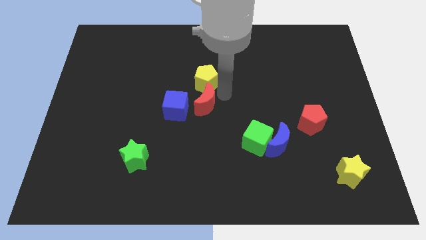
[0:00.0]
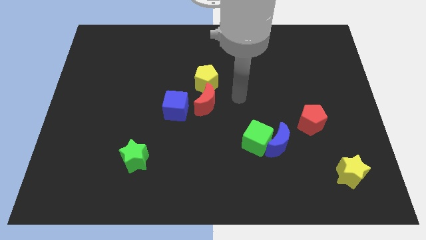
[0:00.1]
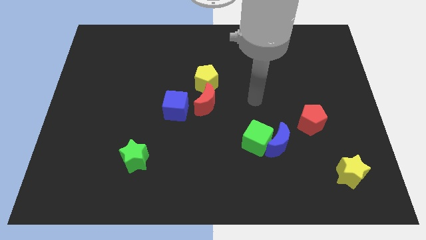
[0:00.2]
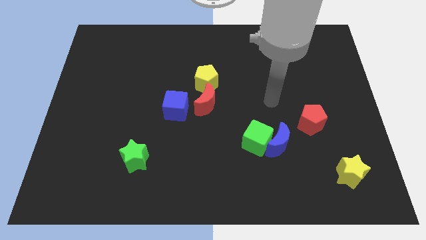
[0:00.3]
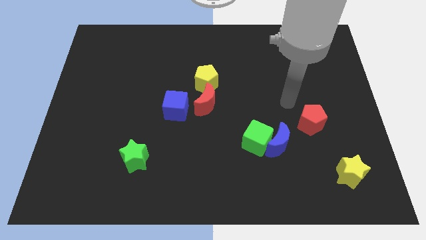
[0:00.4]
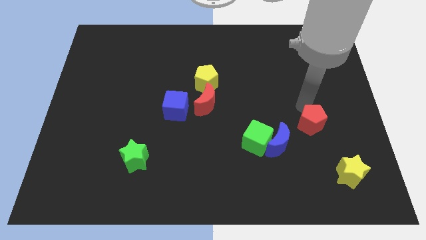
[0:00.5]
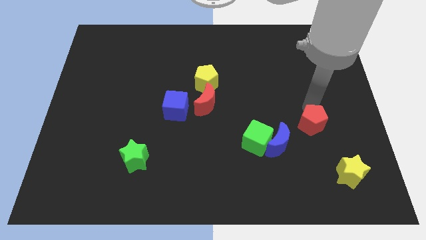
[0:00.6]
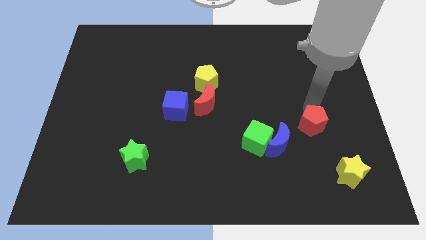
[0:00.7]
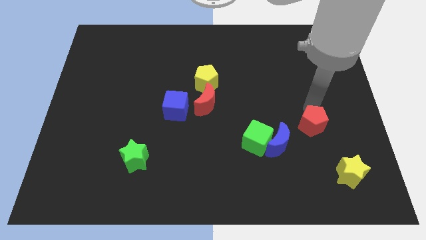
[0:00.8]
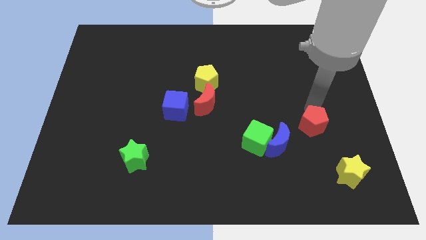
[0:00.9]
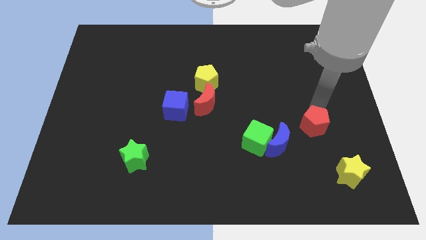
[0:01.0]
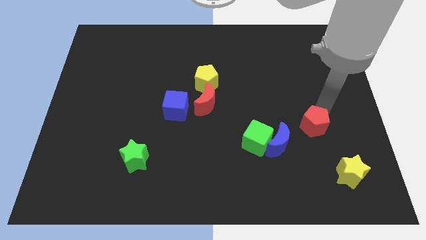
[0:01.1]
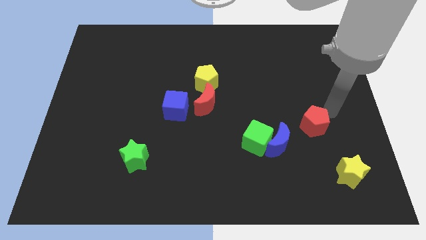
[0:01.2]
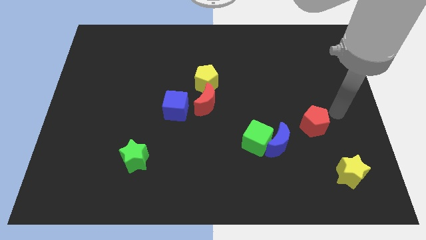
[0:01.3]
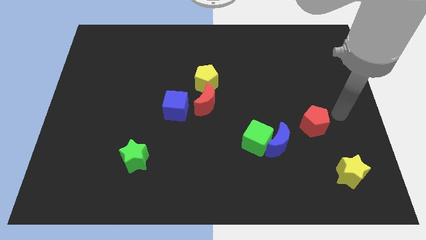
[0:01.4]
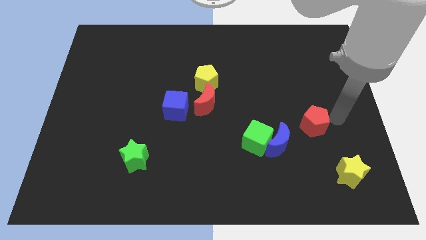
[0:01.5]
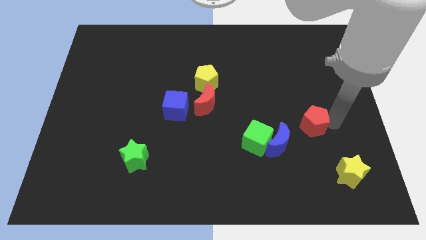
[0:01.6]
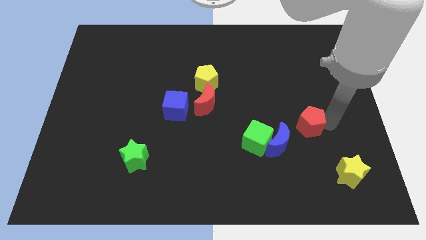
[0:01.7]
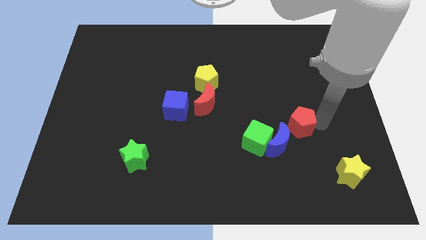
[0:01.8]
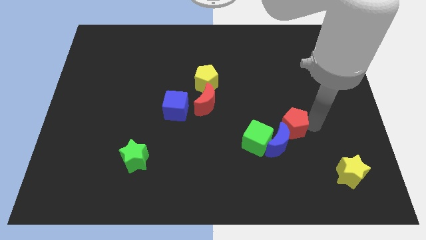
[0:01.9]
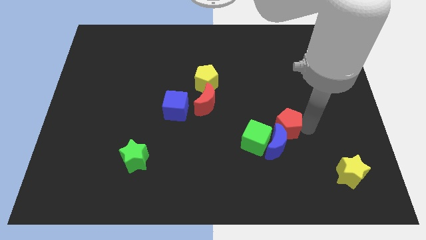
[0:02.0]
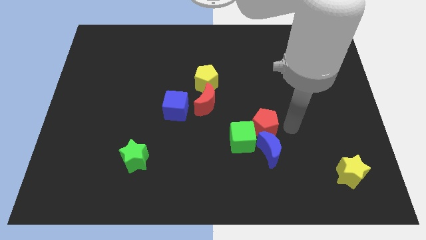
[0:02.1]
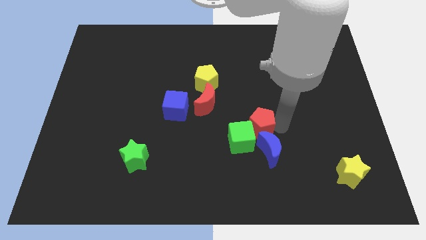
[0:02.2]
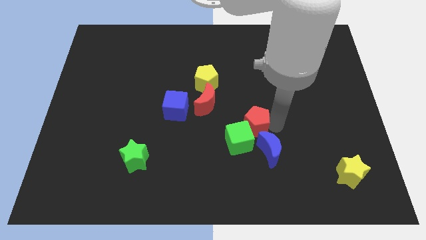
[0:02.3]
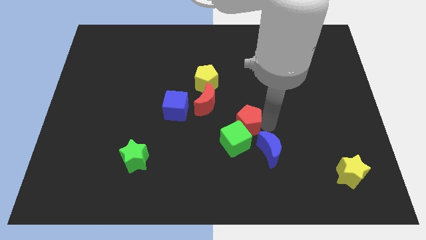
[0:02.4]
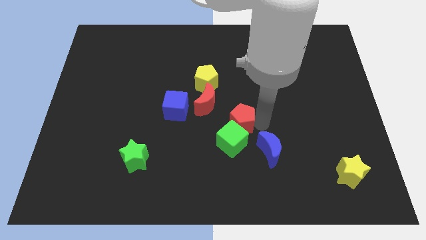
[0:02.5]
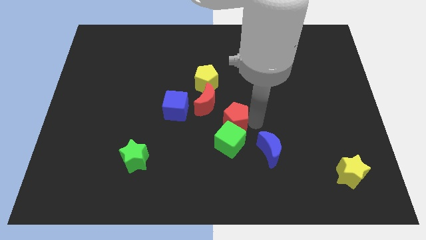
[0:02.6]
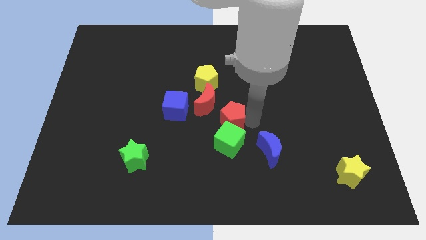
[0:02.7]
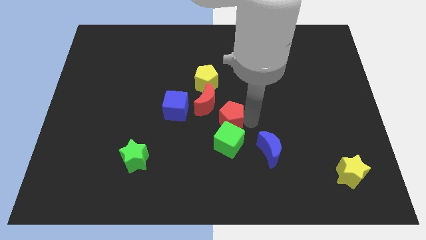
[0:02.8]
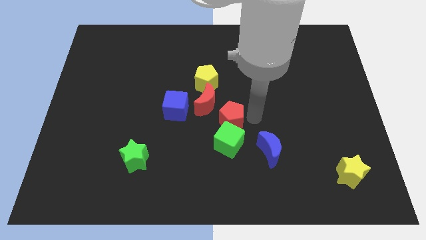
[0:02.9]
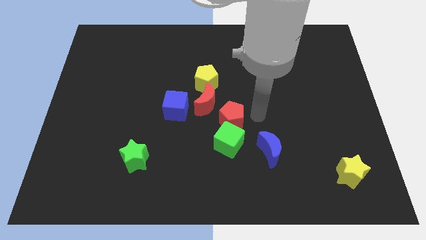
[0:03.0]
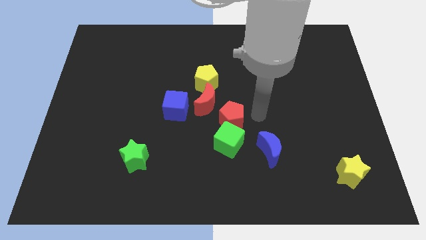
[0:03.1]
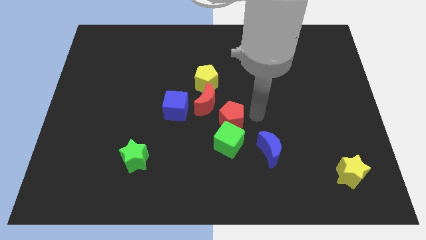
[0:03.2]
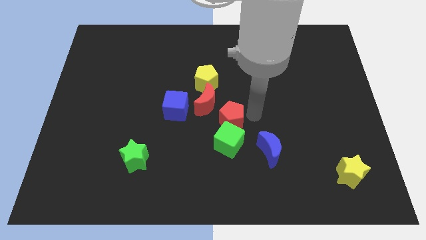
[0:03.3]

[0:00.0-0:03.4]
push the red pentagon into the green cube and blue moon

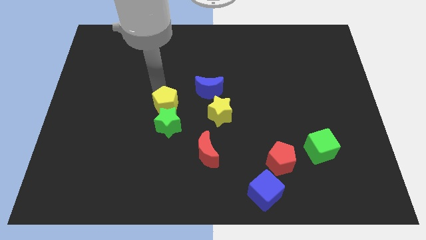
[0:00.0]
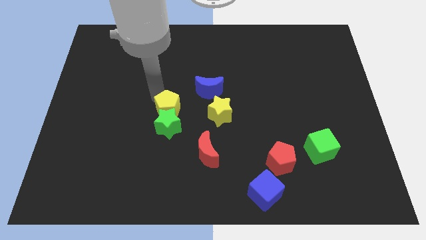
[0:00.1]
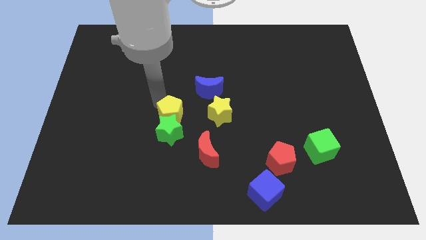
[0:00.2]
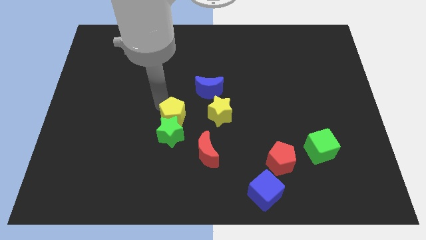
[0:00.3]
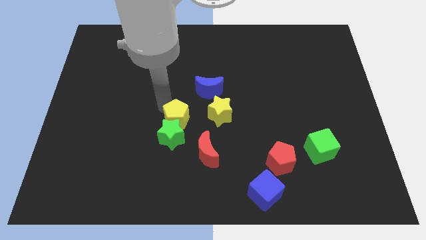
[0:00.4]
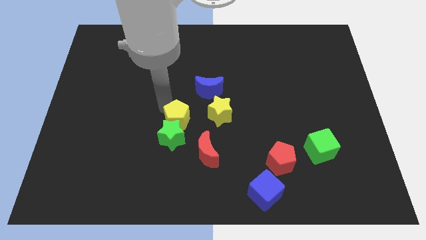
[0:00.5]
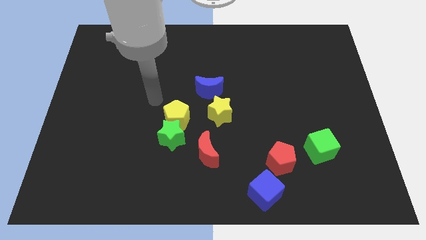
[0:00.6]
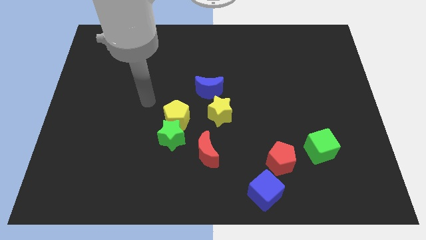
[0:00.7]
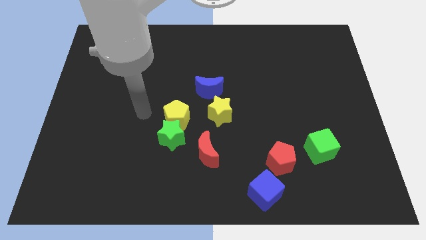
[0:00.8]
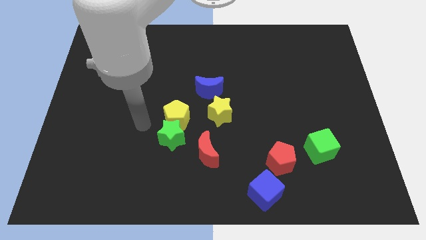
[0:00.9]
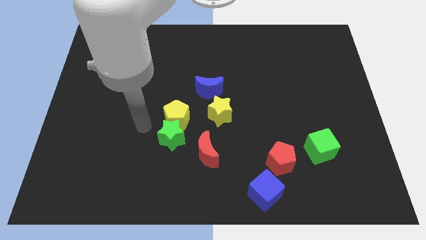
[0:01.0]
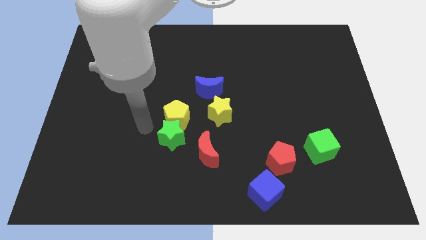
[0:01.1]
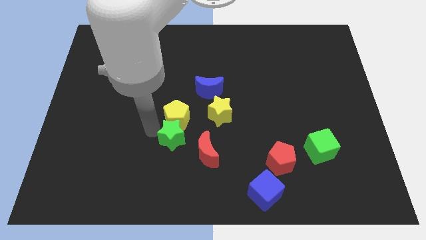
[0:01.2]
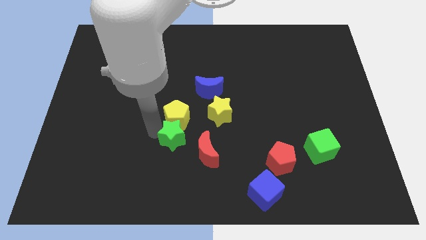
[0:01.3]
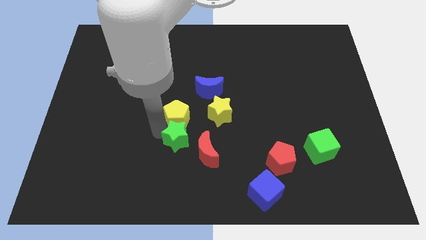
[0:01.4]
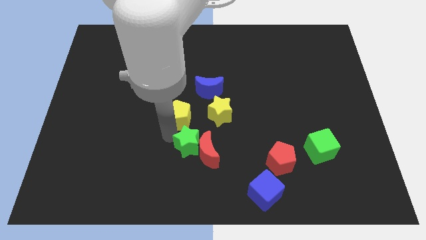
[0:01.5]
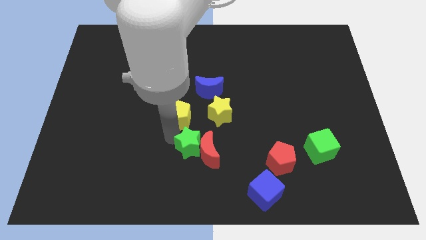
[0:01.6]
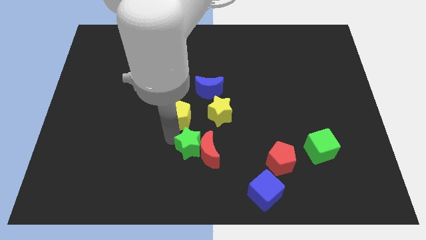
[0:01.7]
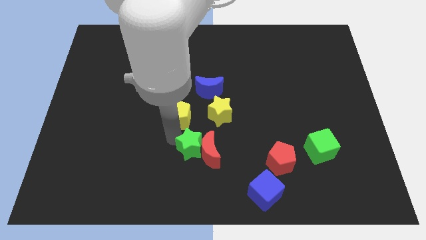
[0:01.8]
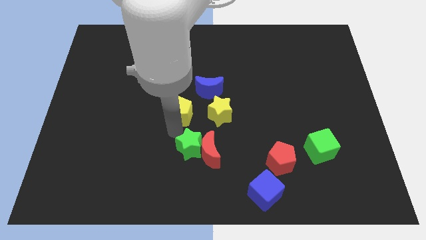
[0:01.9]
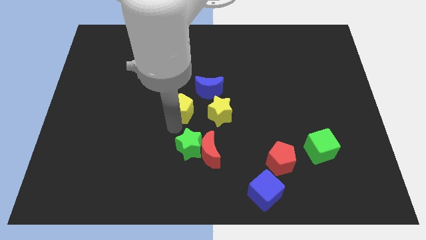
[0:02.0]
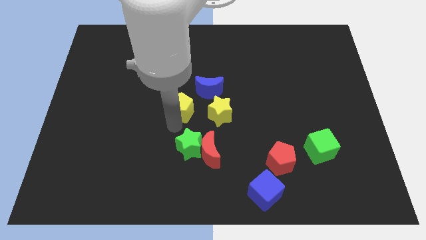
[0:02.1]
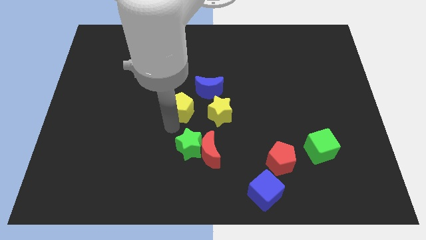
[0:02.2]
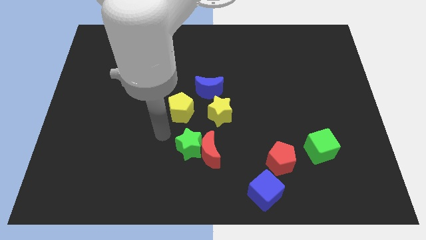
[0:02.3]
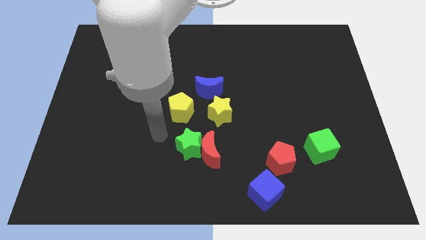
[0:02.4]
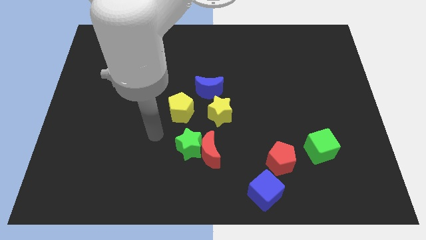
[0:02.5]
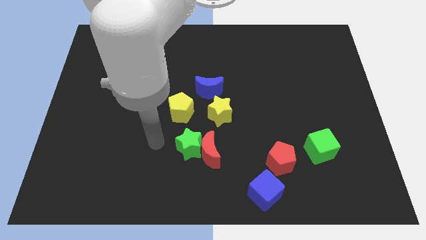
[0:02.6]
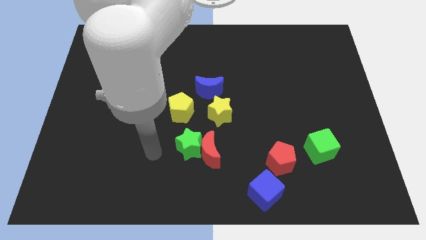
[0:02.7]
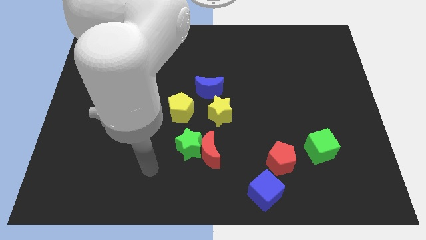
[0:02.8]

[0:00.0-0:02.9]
separate the yellow pentagon and green star

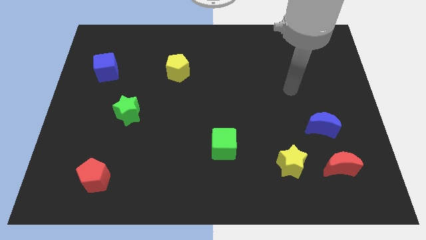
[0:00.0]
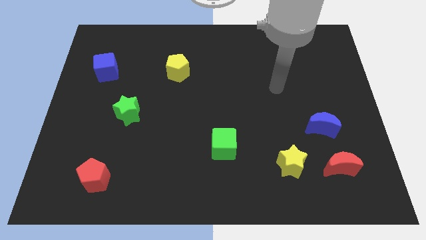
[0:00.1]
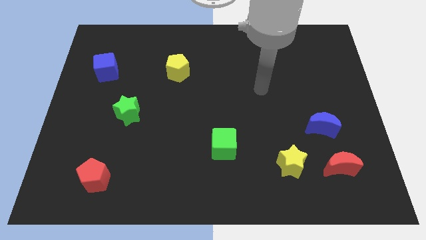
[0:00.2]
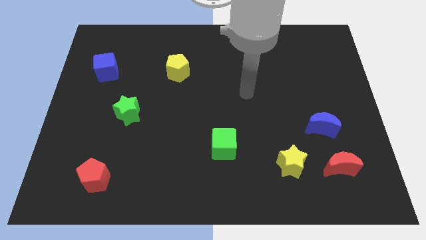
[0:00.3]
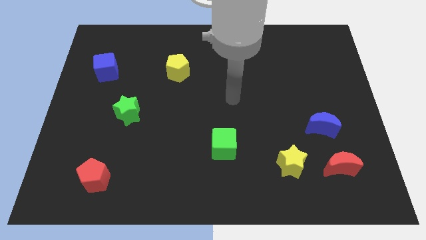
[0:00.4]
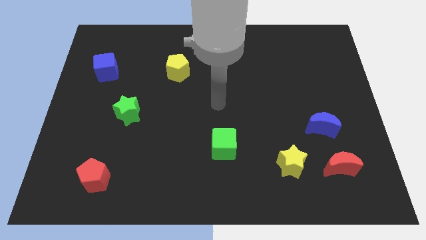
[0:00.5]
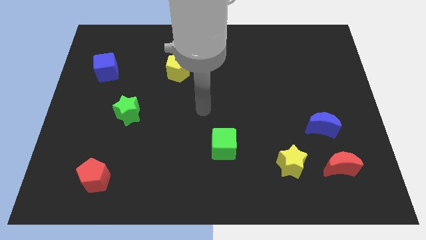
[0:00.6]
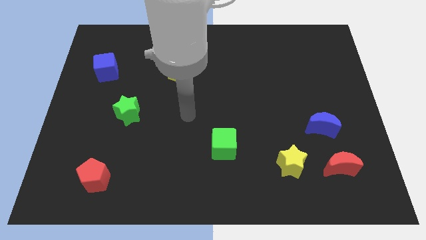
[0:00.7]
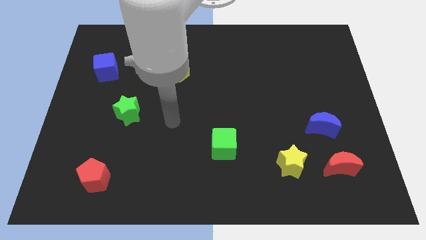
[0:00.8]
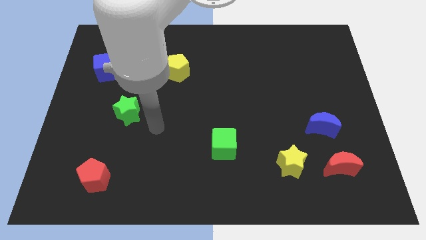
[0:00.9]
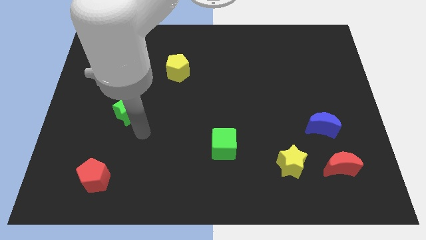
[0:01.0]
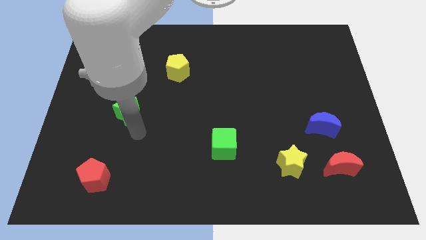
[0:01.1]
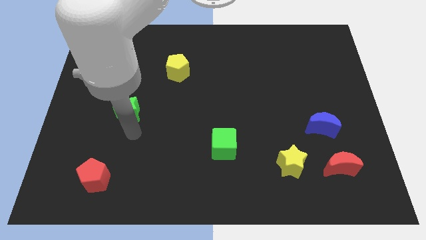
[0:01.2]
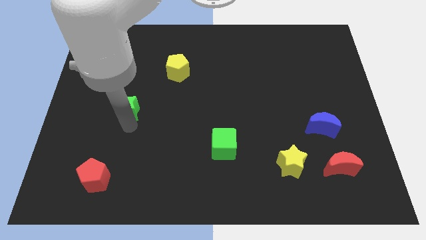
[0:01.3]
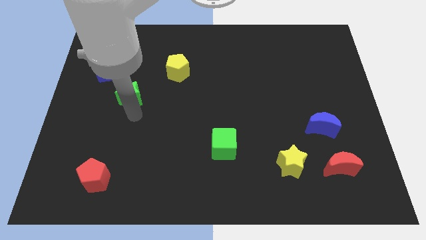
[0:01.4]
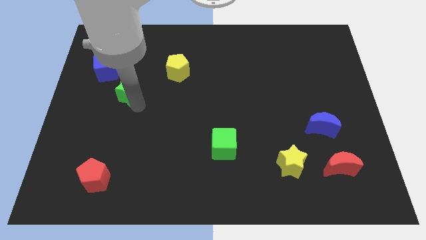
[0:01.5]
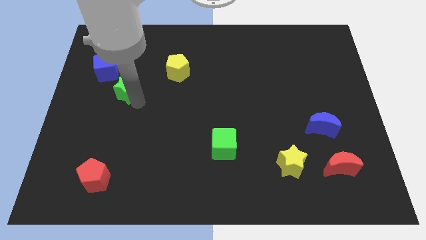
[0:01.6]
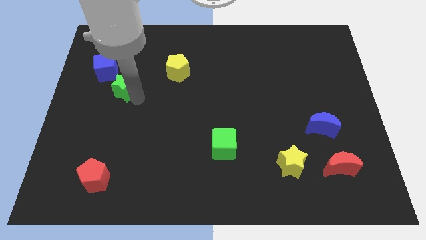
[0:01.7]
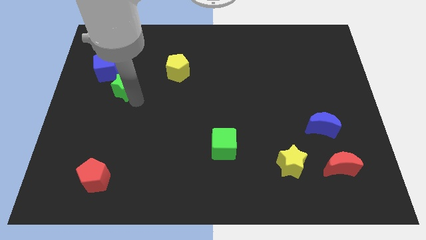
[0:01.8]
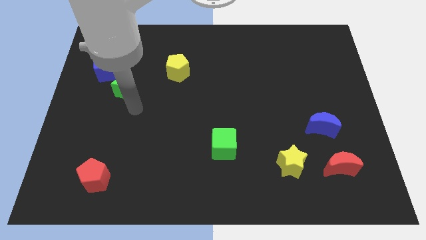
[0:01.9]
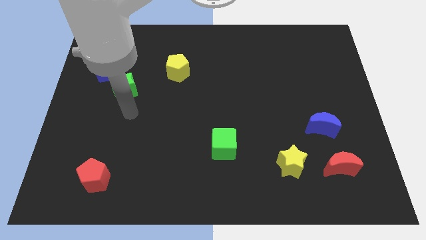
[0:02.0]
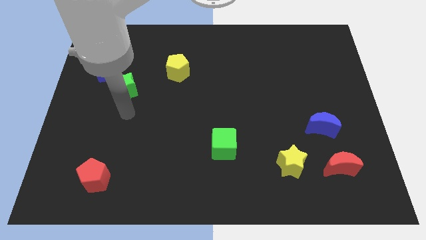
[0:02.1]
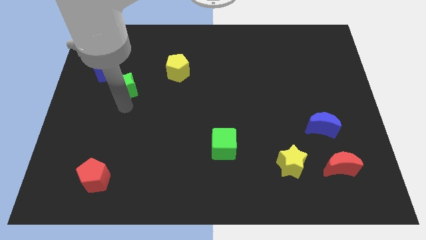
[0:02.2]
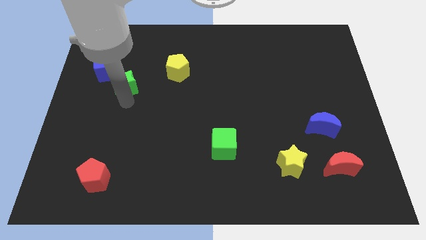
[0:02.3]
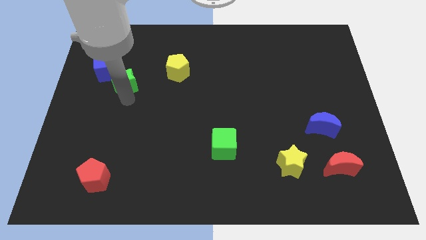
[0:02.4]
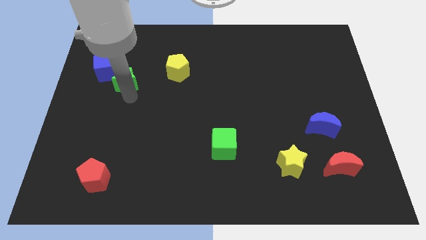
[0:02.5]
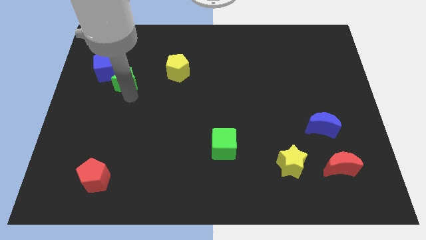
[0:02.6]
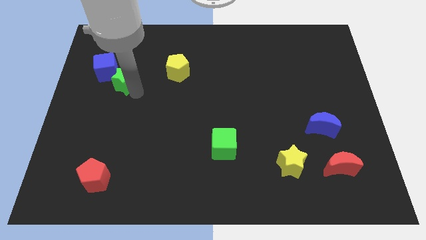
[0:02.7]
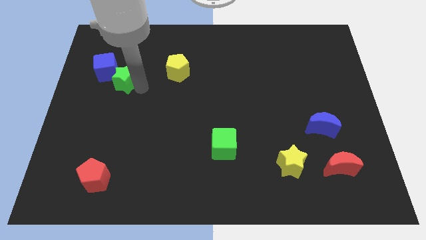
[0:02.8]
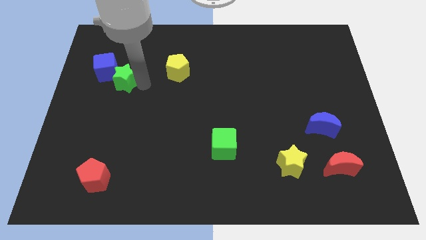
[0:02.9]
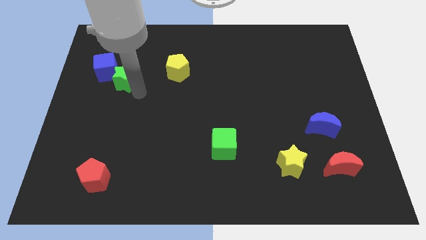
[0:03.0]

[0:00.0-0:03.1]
move the green star to the bottom left side of the blue cube
